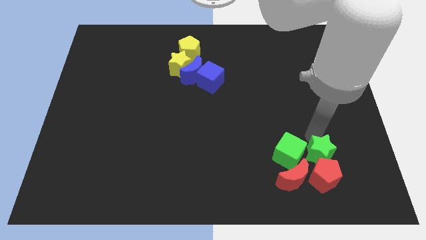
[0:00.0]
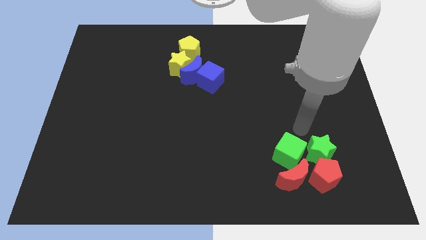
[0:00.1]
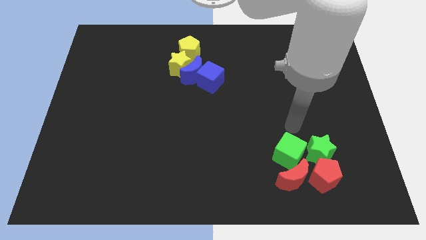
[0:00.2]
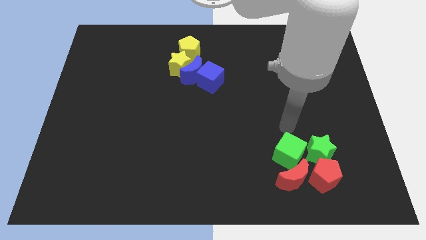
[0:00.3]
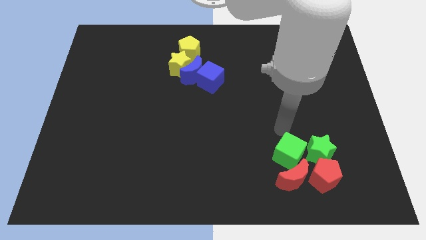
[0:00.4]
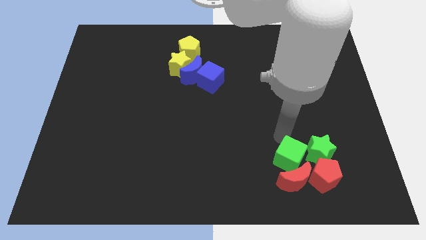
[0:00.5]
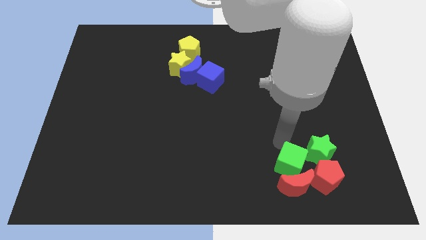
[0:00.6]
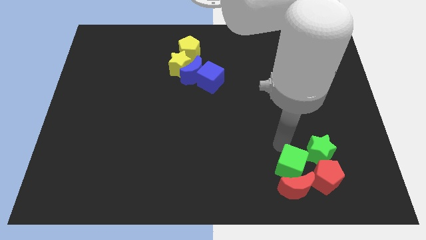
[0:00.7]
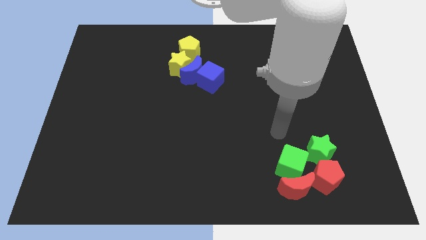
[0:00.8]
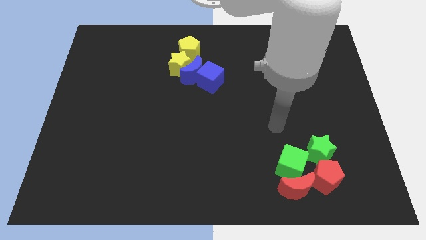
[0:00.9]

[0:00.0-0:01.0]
push the green blocks into the red blocks

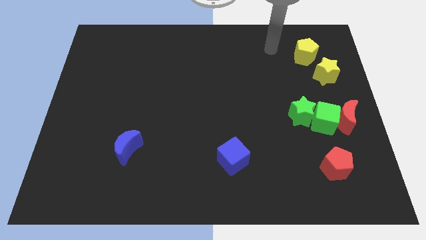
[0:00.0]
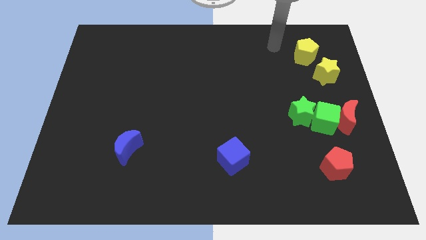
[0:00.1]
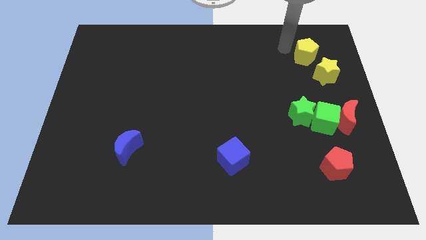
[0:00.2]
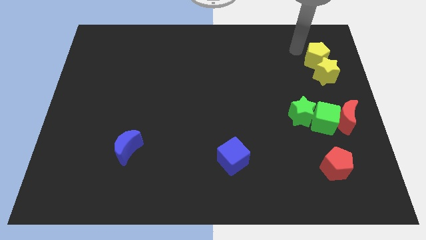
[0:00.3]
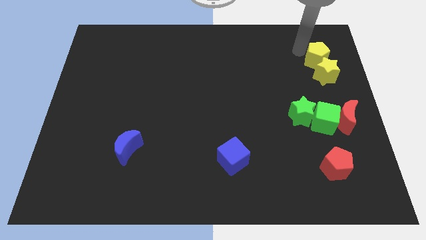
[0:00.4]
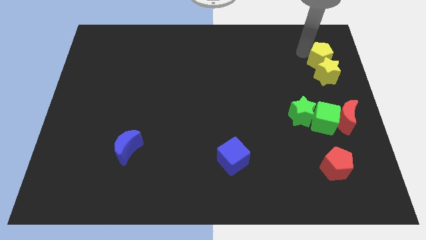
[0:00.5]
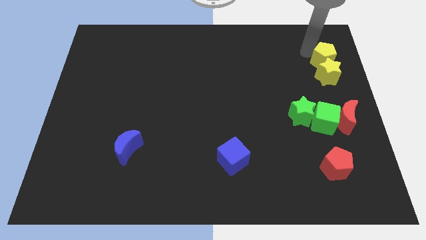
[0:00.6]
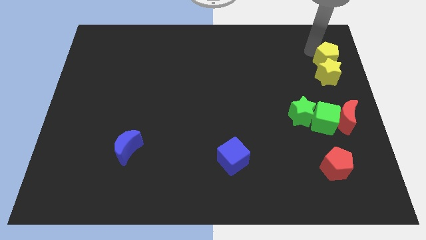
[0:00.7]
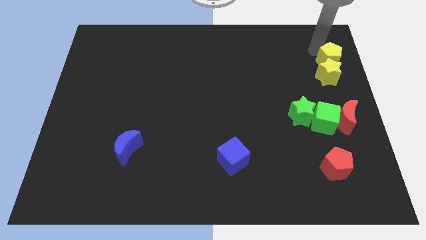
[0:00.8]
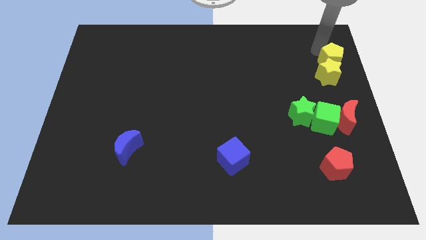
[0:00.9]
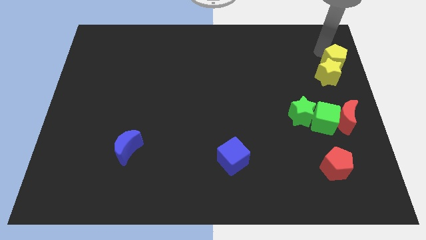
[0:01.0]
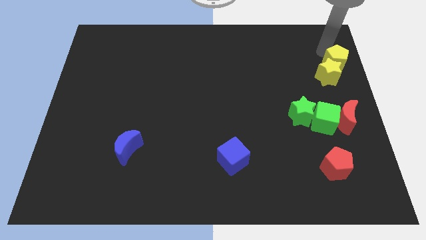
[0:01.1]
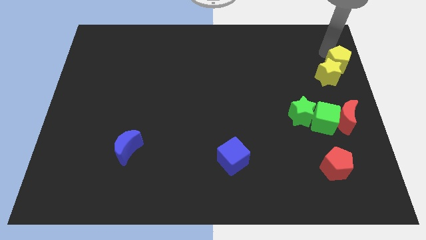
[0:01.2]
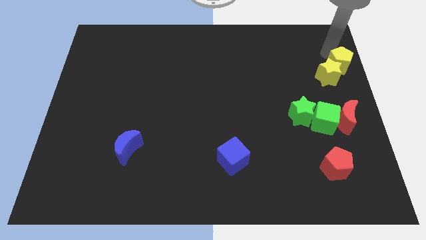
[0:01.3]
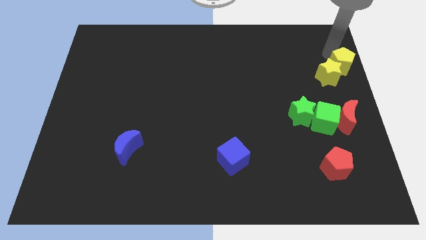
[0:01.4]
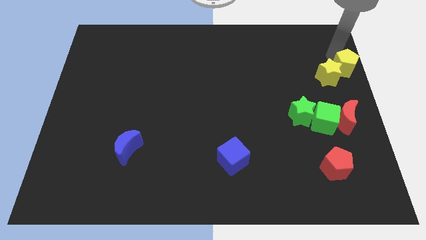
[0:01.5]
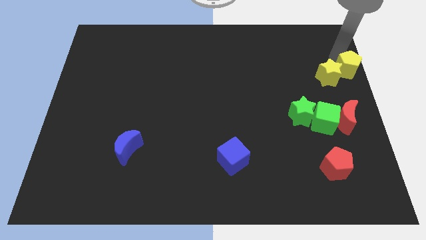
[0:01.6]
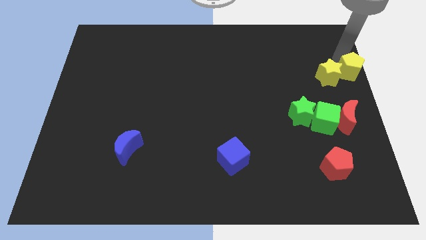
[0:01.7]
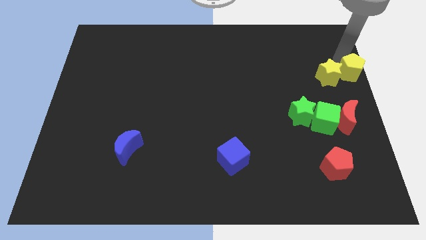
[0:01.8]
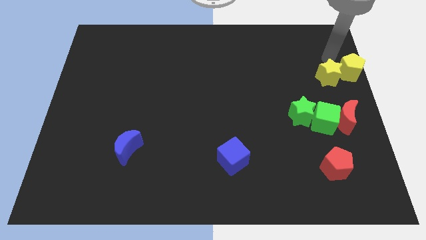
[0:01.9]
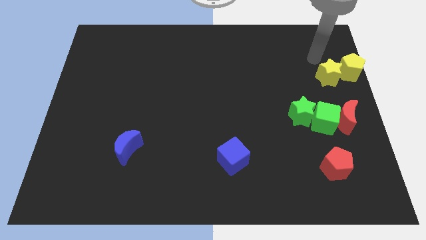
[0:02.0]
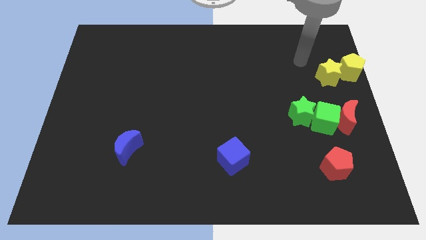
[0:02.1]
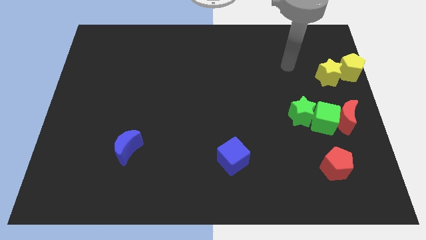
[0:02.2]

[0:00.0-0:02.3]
drag the yellow pentagon to the right of yellow star

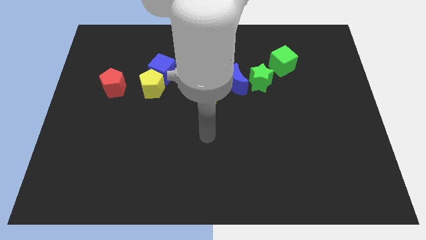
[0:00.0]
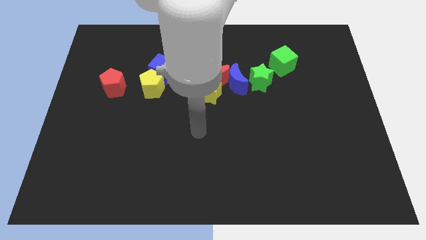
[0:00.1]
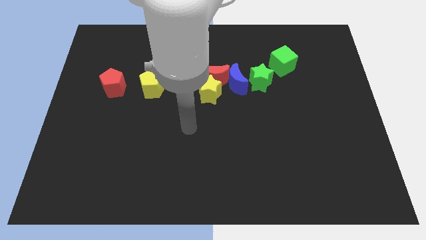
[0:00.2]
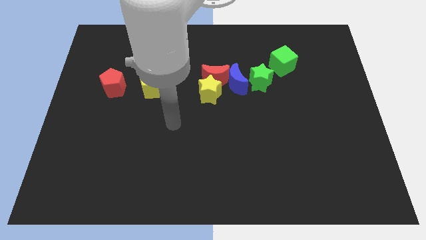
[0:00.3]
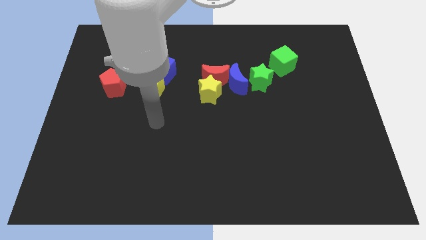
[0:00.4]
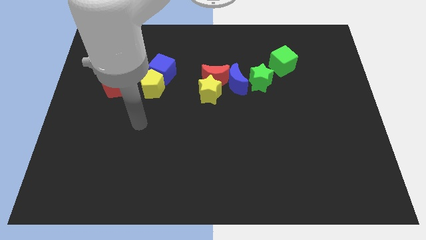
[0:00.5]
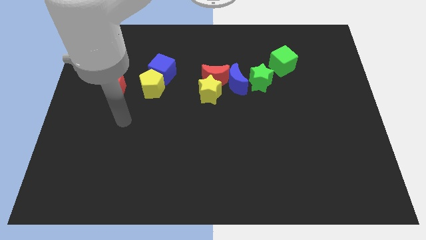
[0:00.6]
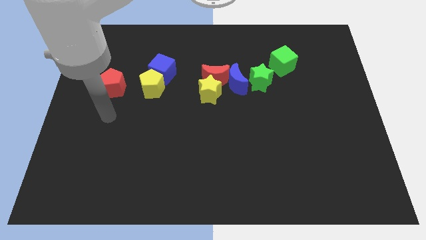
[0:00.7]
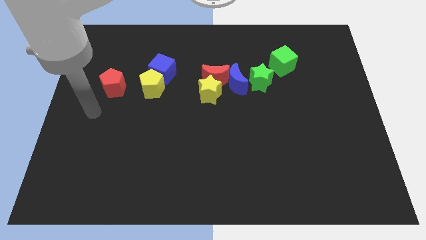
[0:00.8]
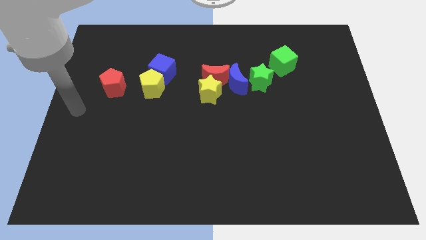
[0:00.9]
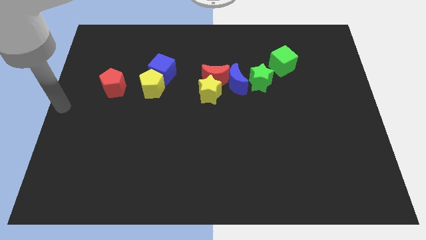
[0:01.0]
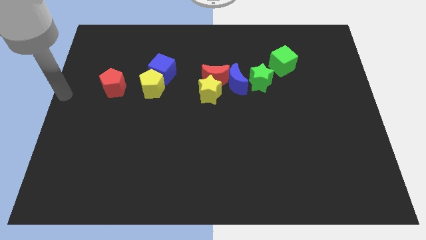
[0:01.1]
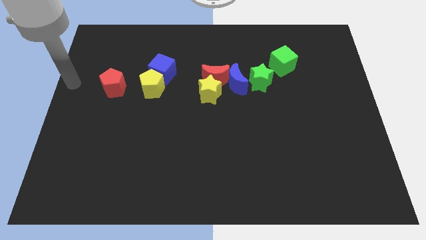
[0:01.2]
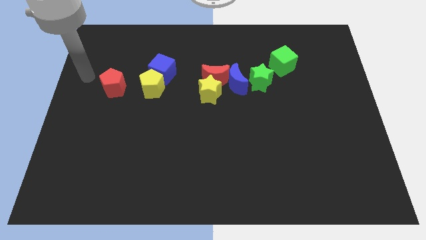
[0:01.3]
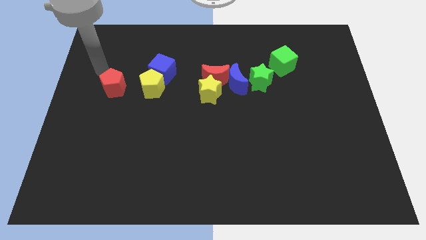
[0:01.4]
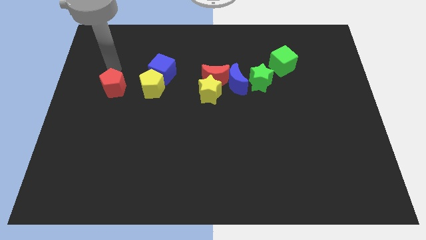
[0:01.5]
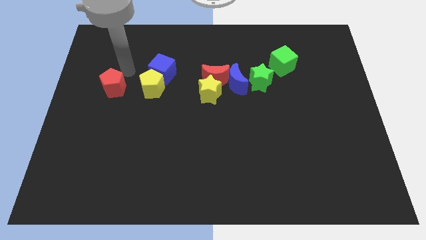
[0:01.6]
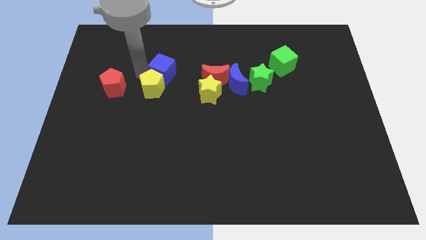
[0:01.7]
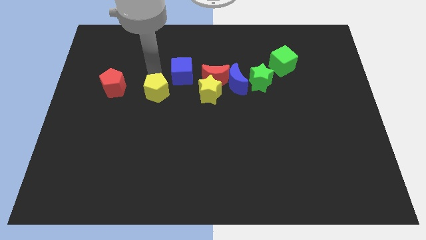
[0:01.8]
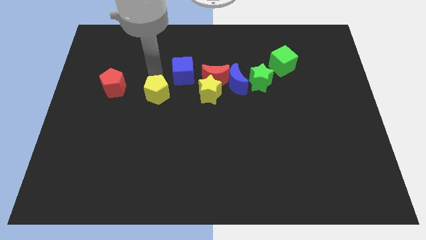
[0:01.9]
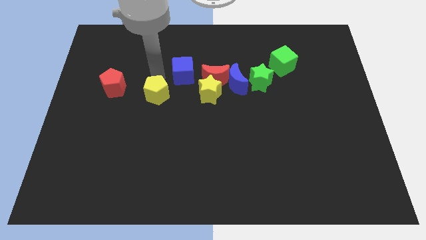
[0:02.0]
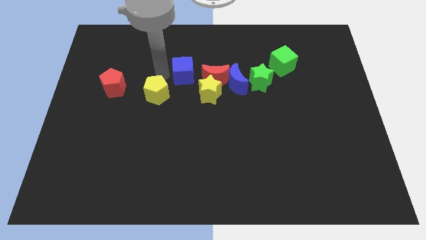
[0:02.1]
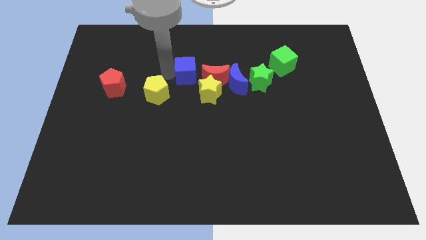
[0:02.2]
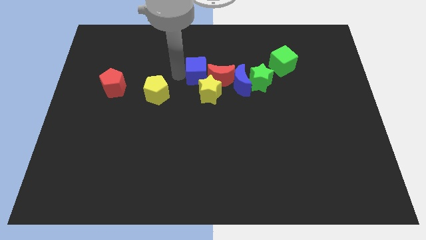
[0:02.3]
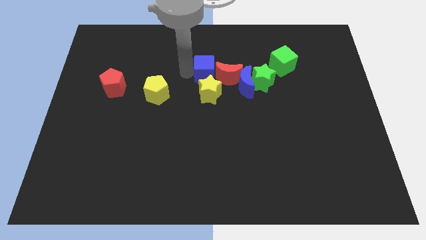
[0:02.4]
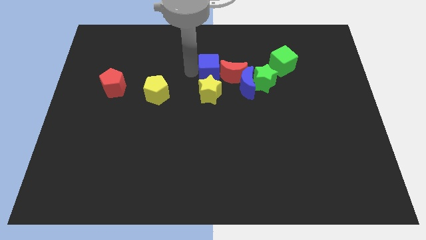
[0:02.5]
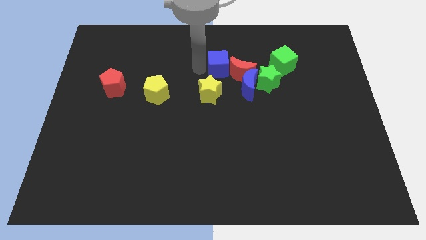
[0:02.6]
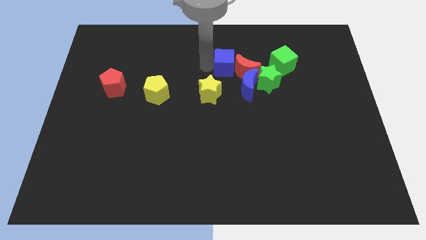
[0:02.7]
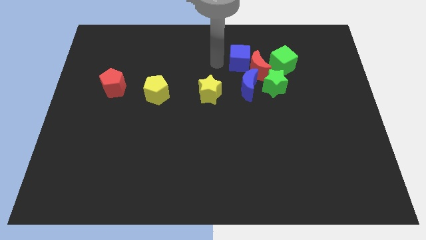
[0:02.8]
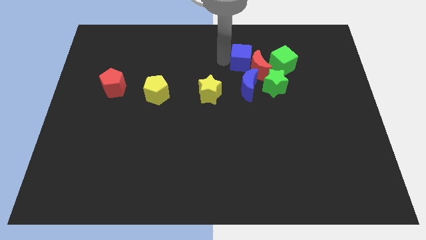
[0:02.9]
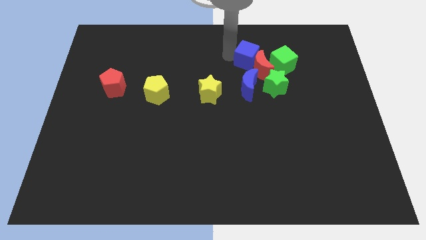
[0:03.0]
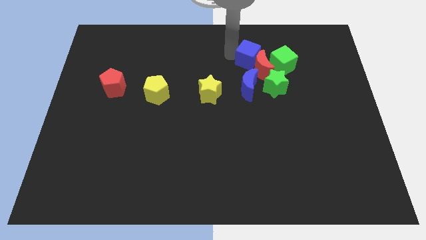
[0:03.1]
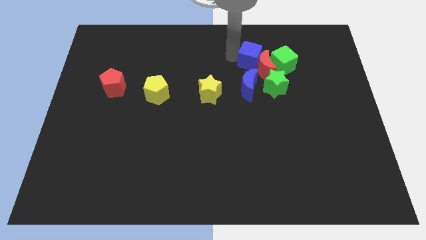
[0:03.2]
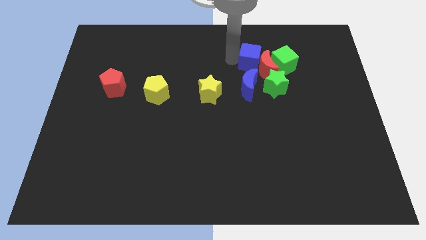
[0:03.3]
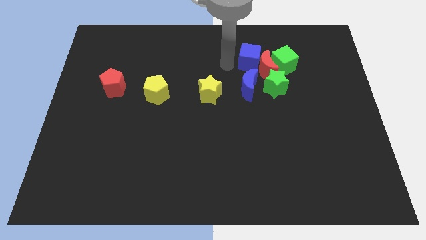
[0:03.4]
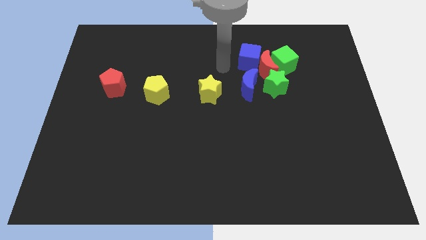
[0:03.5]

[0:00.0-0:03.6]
push the blue cube to the top side of the blue moon

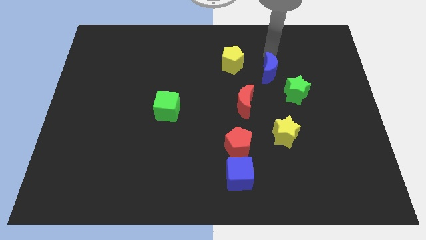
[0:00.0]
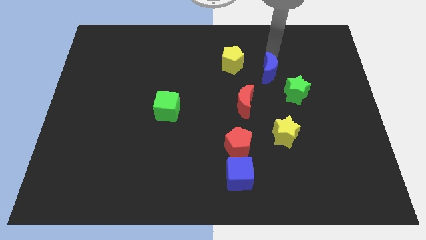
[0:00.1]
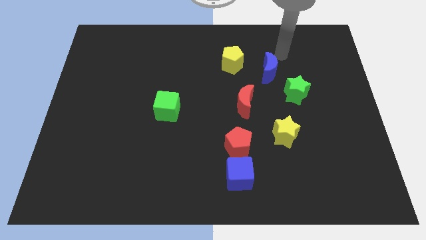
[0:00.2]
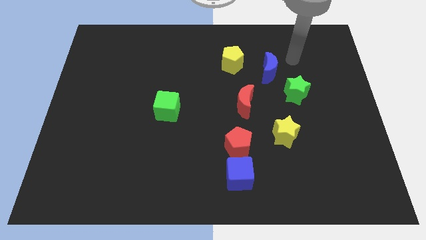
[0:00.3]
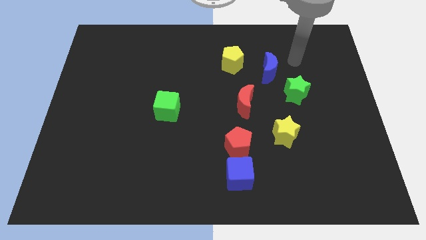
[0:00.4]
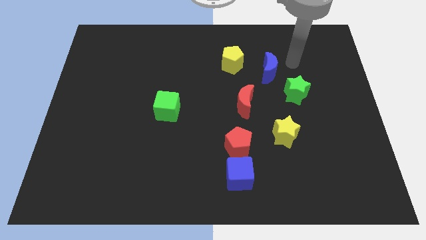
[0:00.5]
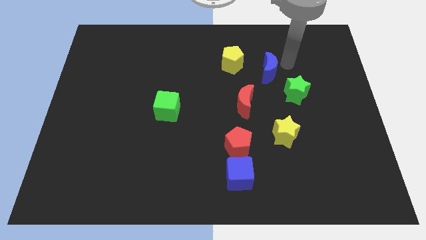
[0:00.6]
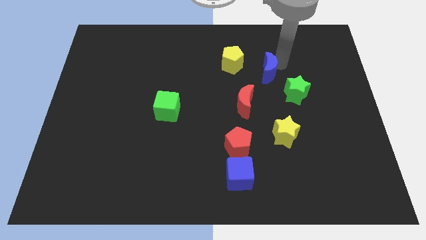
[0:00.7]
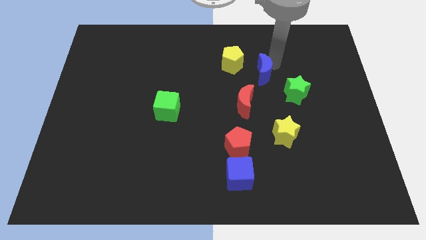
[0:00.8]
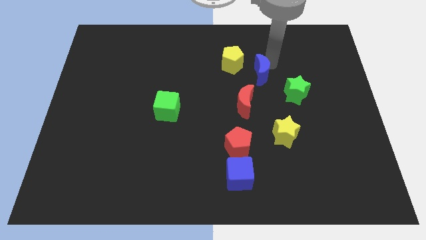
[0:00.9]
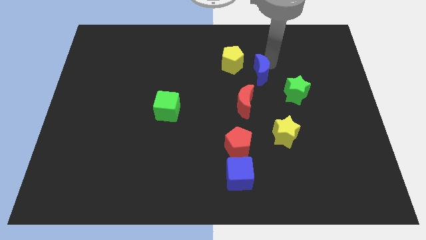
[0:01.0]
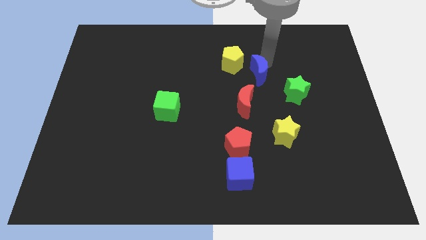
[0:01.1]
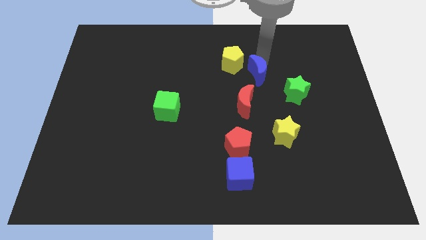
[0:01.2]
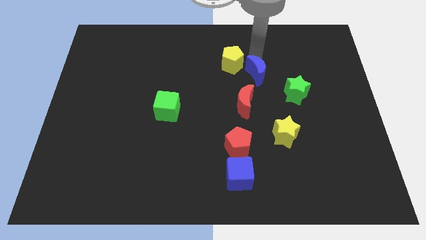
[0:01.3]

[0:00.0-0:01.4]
move the blue moon to the top of the red moon

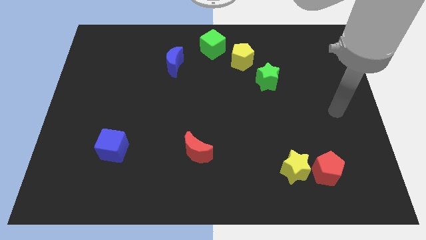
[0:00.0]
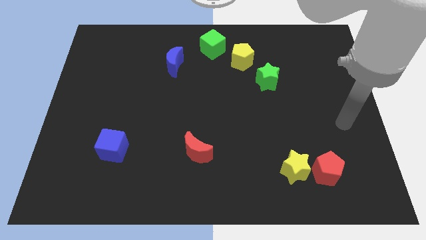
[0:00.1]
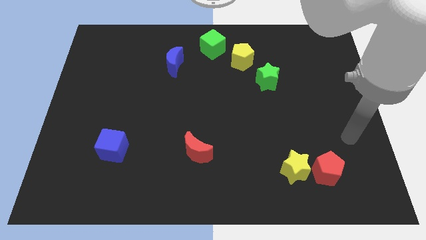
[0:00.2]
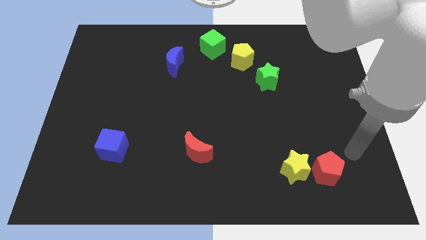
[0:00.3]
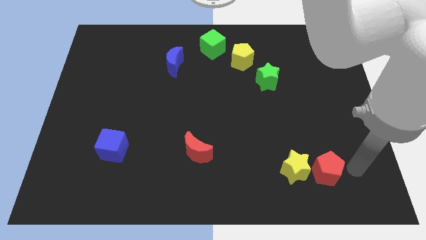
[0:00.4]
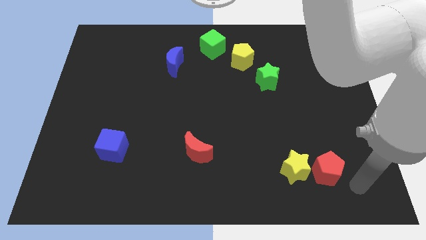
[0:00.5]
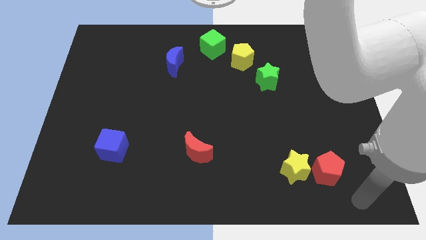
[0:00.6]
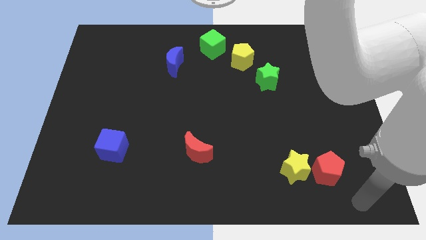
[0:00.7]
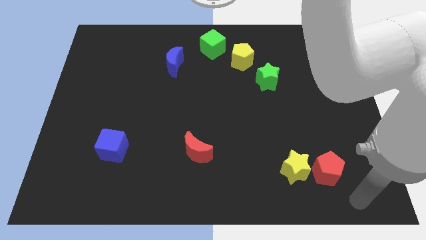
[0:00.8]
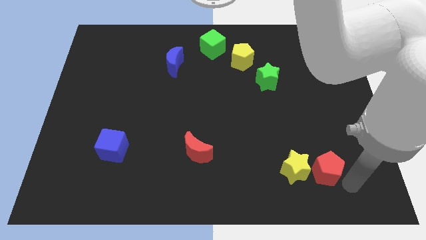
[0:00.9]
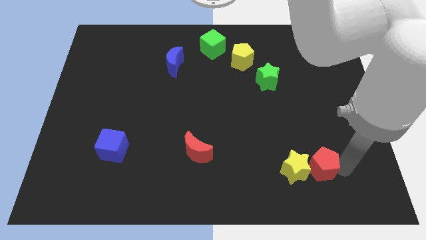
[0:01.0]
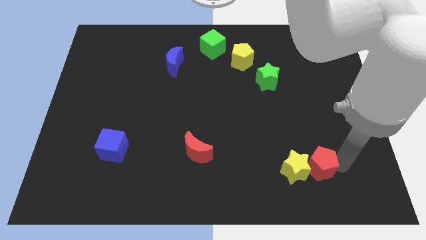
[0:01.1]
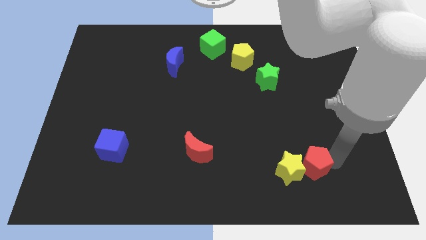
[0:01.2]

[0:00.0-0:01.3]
push the red pentagon into yellow star
